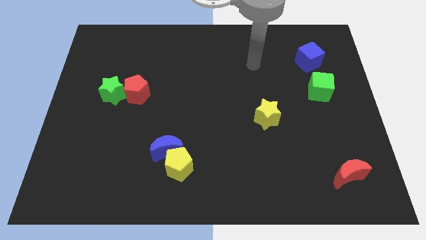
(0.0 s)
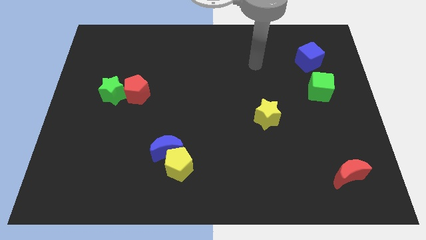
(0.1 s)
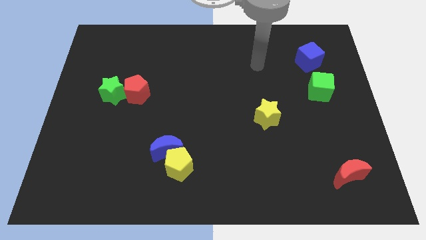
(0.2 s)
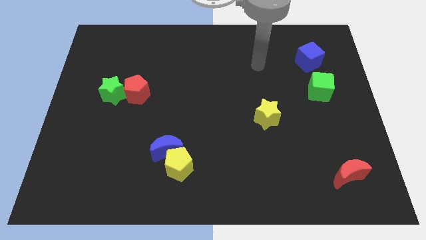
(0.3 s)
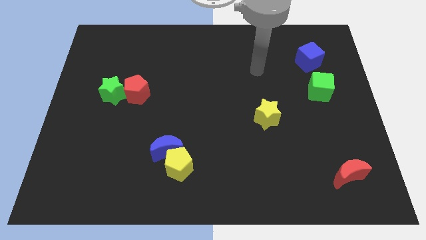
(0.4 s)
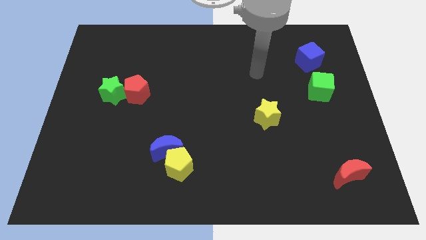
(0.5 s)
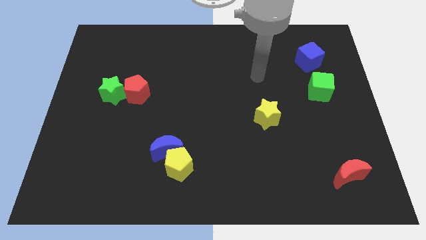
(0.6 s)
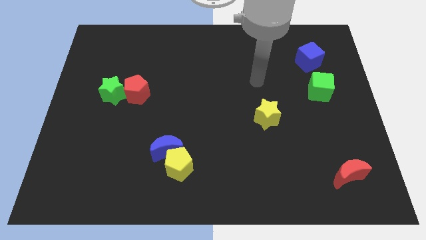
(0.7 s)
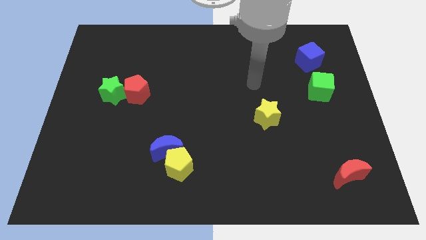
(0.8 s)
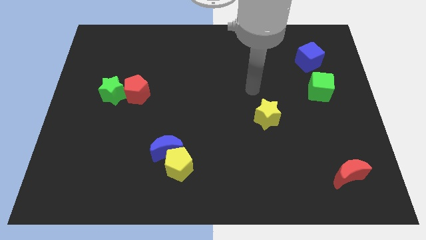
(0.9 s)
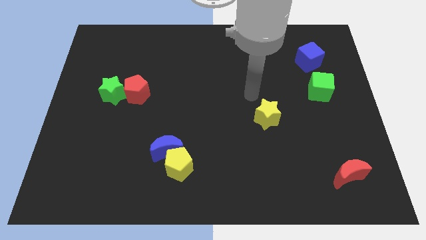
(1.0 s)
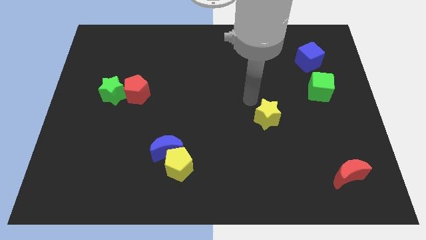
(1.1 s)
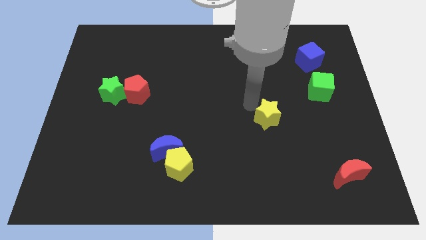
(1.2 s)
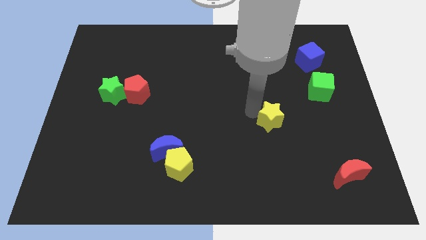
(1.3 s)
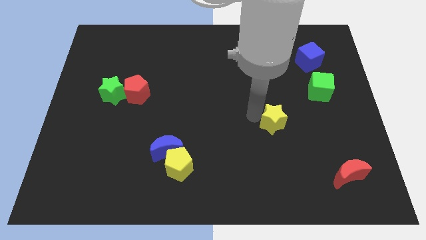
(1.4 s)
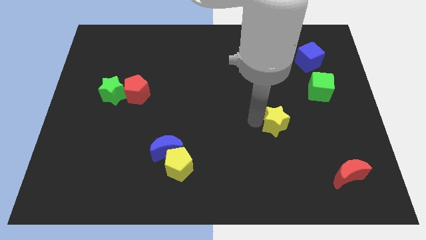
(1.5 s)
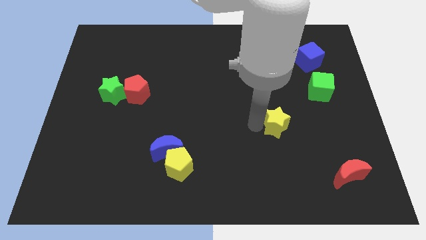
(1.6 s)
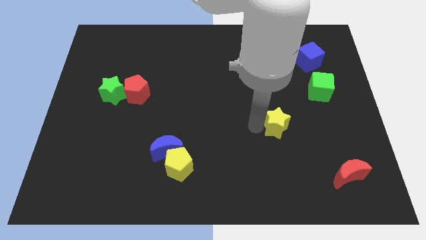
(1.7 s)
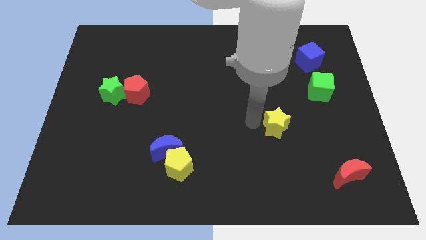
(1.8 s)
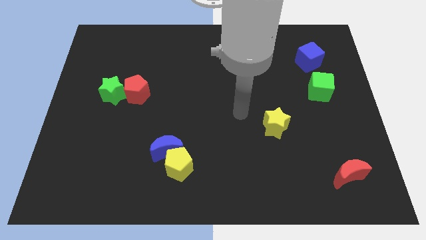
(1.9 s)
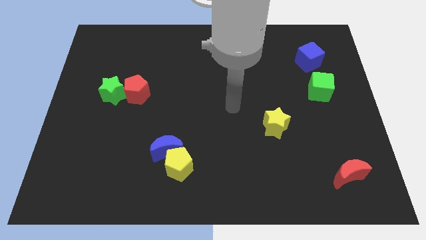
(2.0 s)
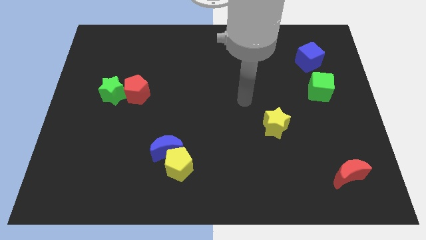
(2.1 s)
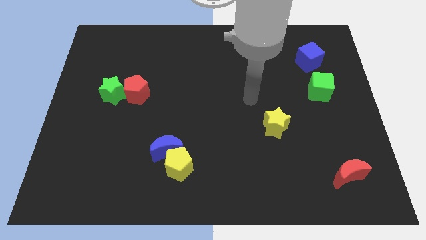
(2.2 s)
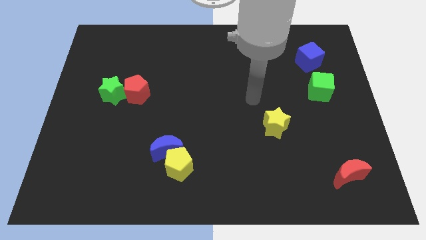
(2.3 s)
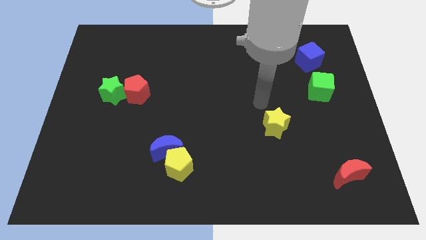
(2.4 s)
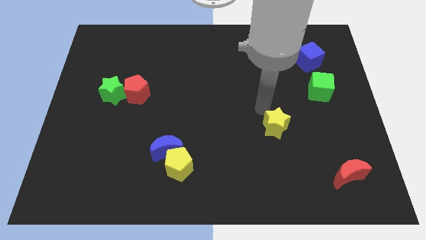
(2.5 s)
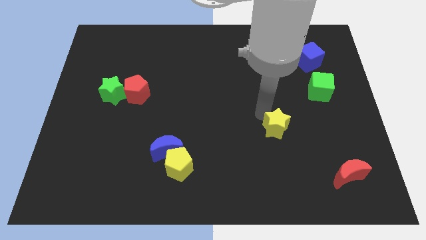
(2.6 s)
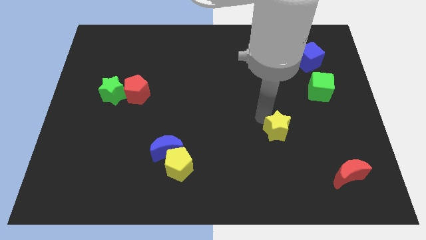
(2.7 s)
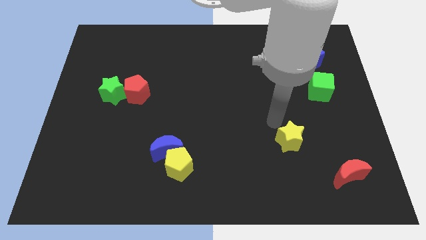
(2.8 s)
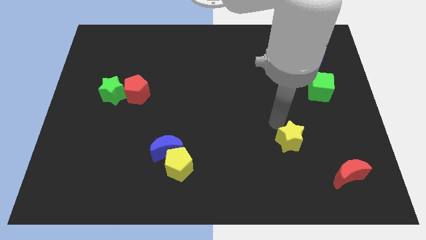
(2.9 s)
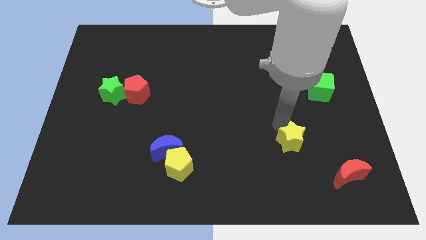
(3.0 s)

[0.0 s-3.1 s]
slide yellow star to the top left of red moon

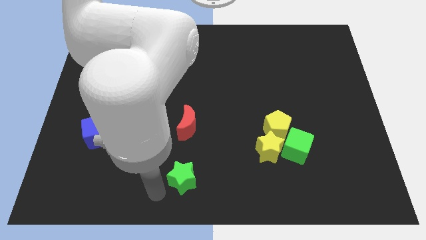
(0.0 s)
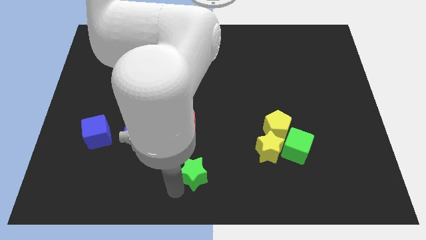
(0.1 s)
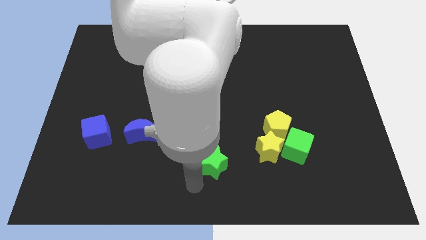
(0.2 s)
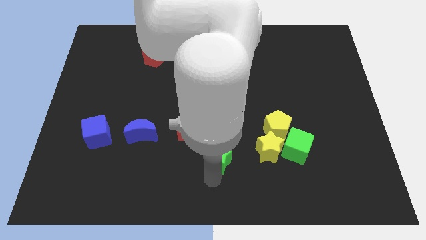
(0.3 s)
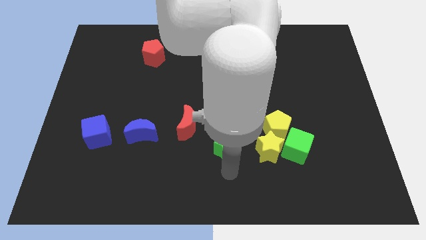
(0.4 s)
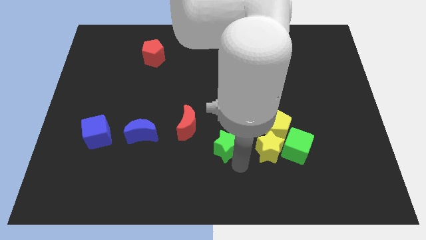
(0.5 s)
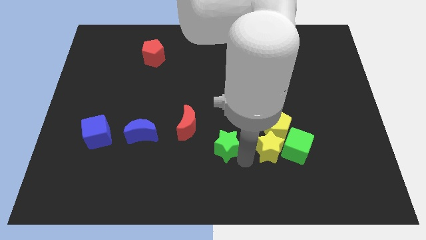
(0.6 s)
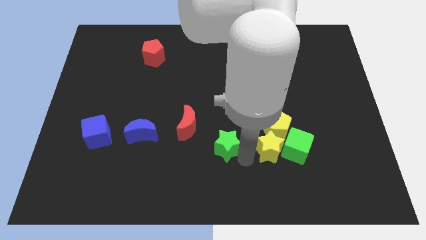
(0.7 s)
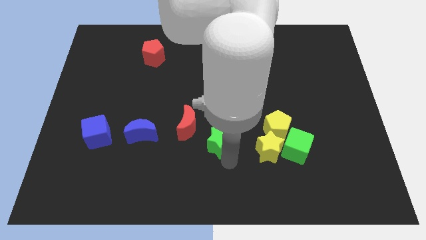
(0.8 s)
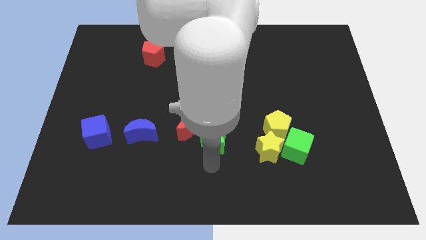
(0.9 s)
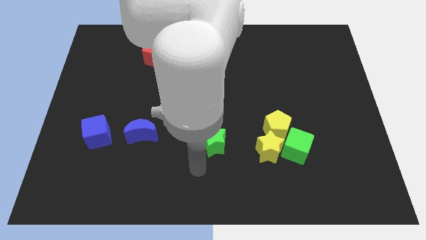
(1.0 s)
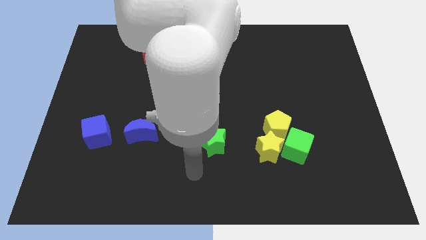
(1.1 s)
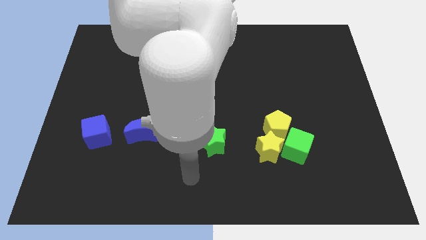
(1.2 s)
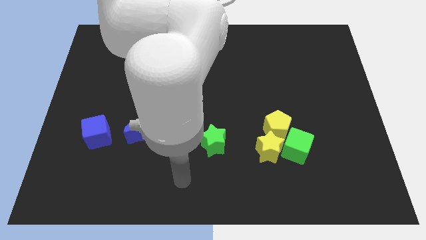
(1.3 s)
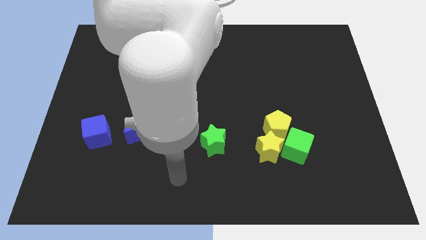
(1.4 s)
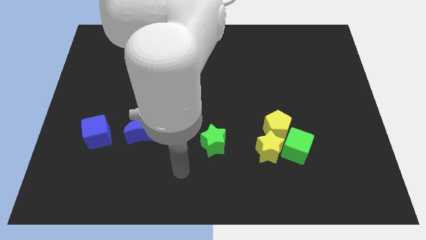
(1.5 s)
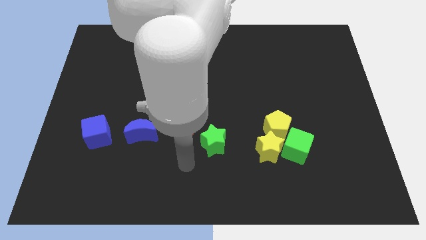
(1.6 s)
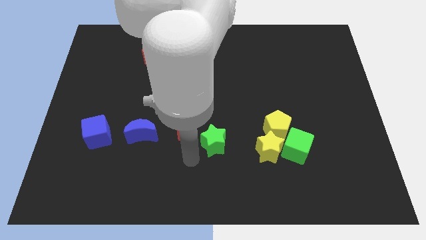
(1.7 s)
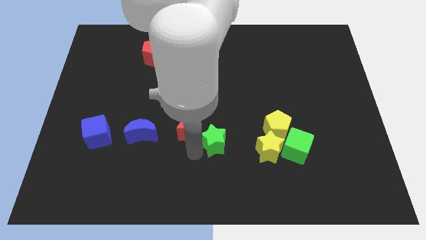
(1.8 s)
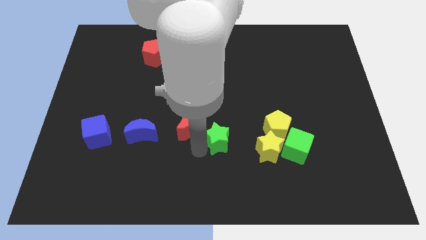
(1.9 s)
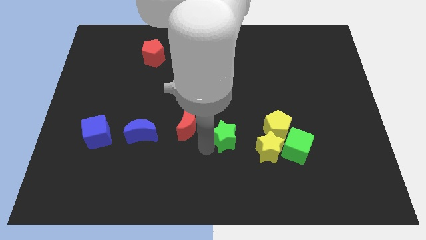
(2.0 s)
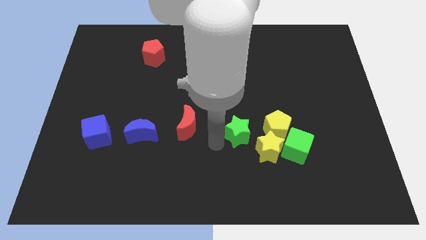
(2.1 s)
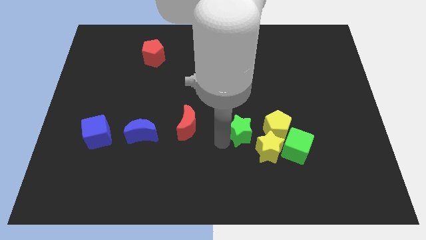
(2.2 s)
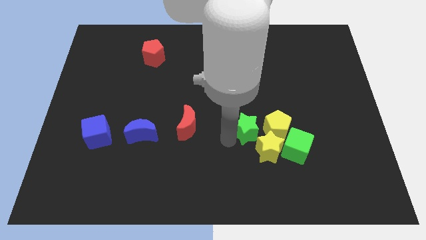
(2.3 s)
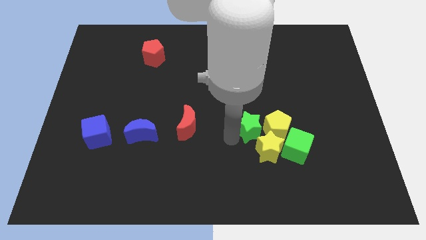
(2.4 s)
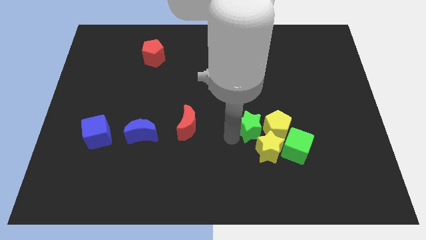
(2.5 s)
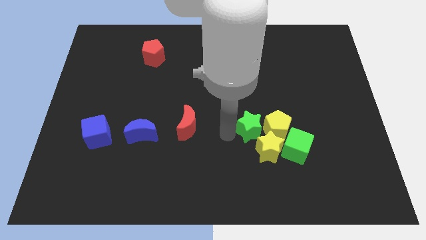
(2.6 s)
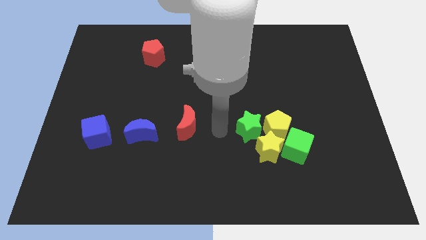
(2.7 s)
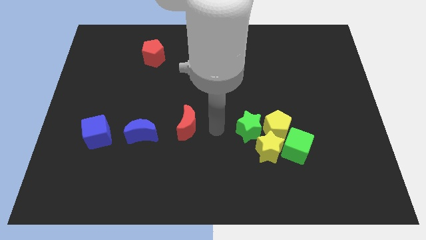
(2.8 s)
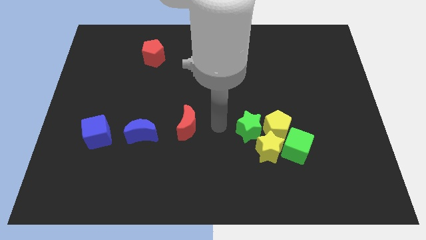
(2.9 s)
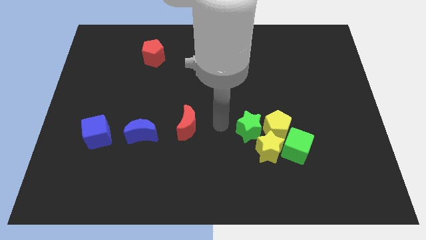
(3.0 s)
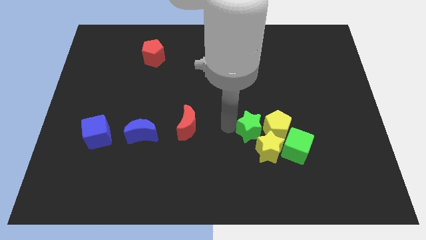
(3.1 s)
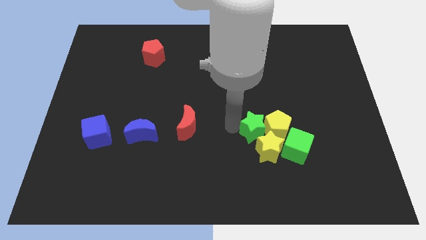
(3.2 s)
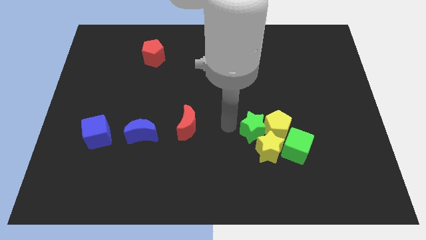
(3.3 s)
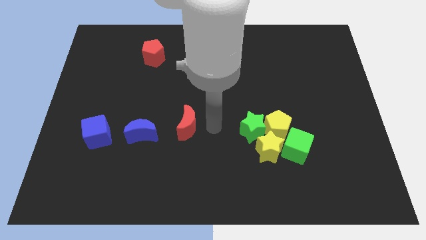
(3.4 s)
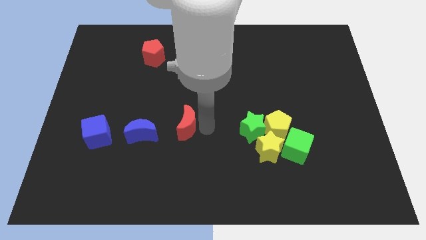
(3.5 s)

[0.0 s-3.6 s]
move the green star into the group of blocks

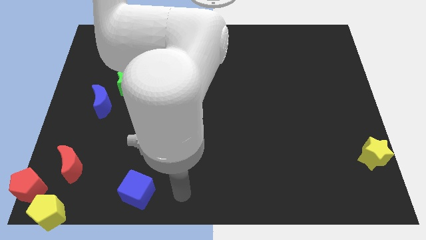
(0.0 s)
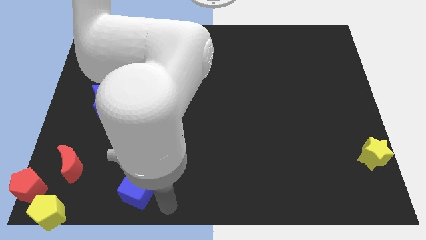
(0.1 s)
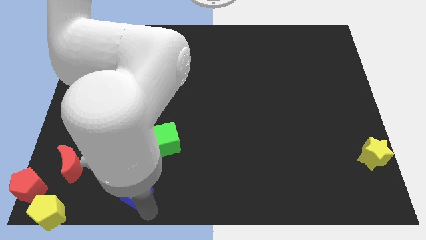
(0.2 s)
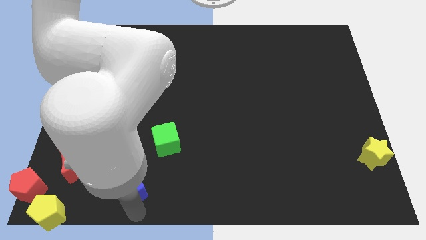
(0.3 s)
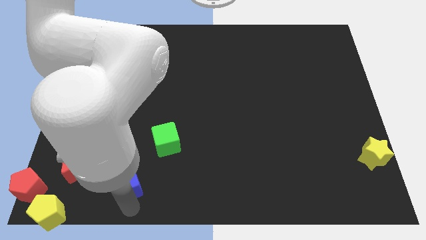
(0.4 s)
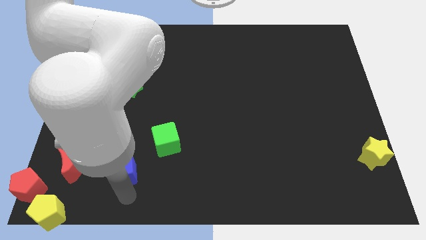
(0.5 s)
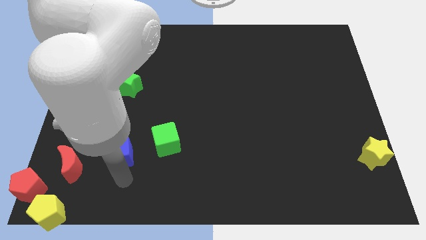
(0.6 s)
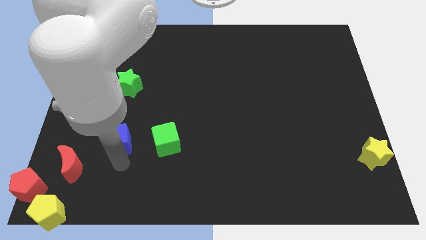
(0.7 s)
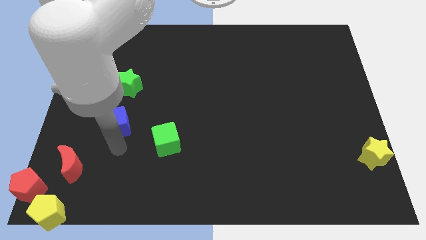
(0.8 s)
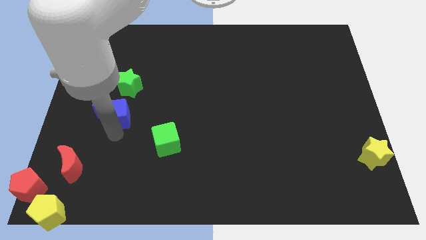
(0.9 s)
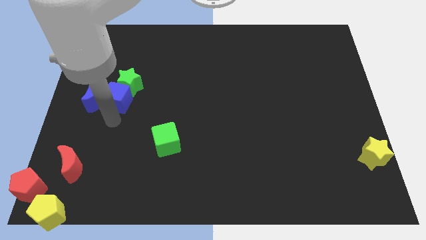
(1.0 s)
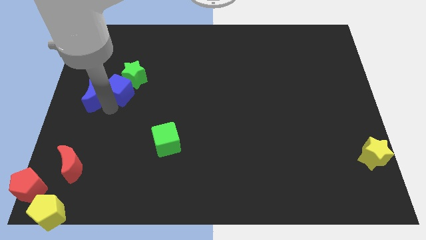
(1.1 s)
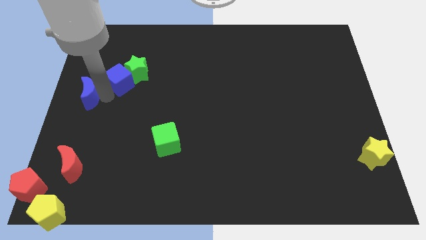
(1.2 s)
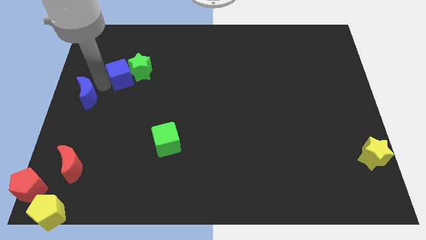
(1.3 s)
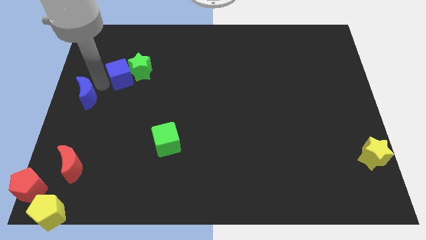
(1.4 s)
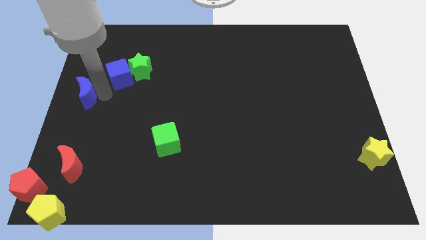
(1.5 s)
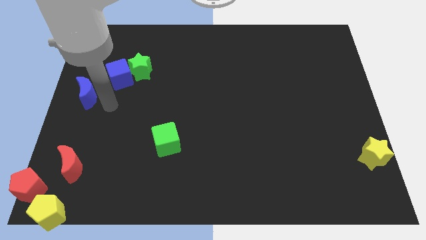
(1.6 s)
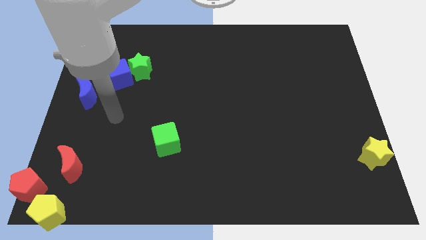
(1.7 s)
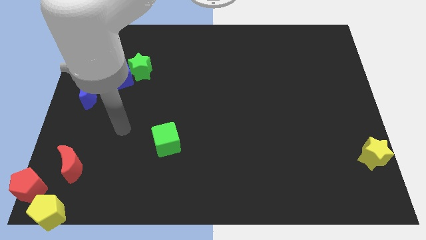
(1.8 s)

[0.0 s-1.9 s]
place the blue cube towards the left side of the green star

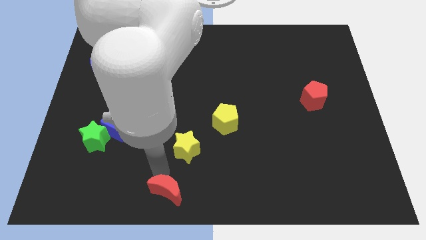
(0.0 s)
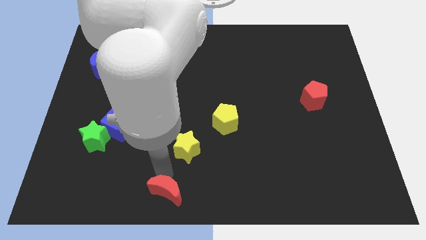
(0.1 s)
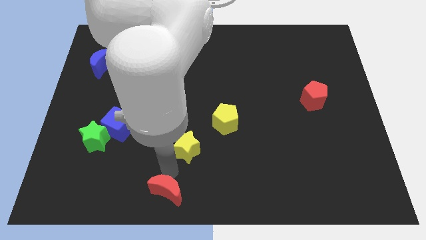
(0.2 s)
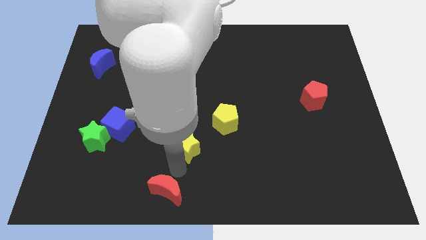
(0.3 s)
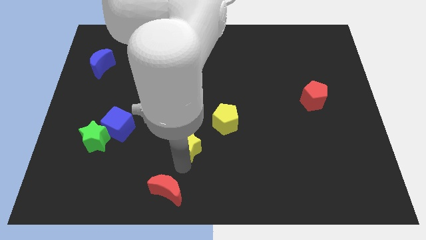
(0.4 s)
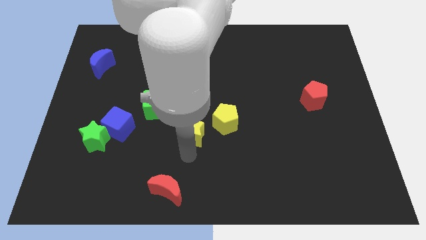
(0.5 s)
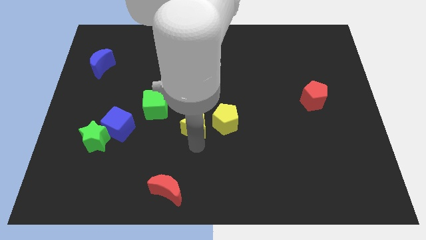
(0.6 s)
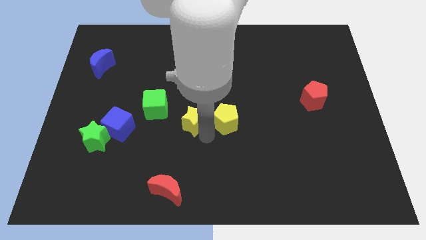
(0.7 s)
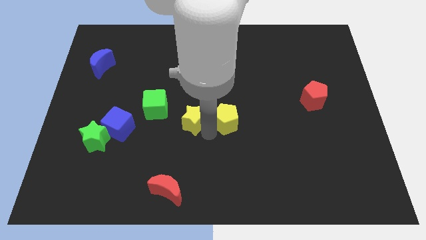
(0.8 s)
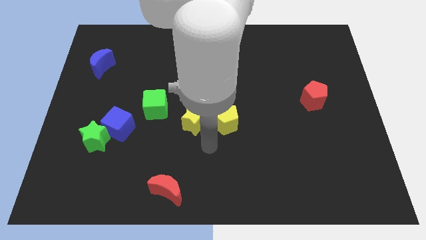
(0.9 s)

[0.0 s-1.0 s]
push yellow star beside yellow pentagon
